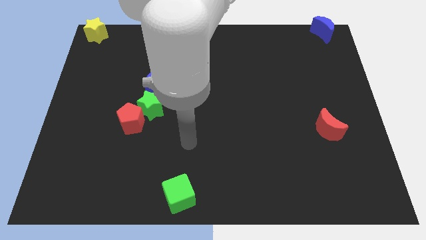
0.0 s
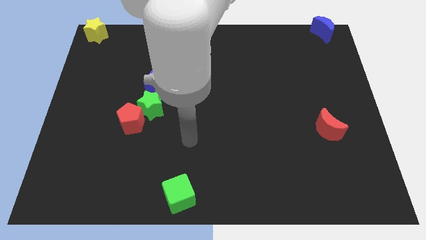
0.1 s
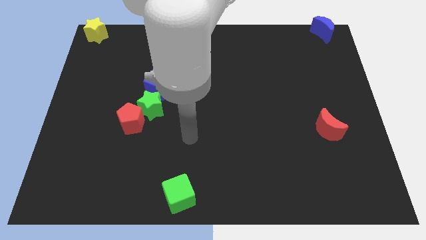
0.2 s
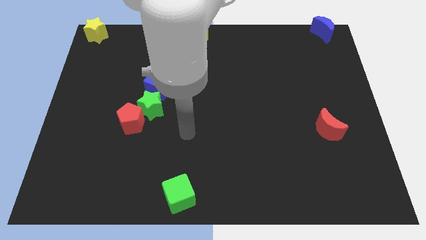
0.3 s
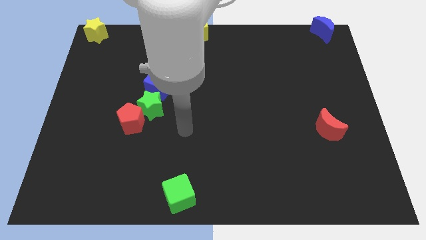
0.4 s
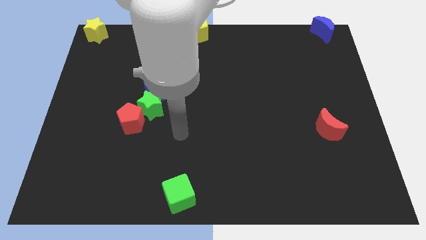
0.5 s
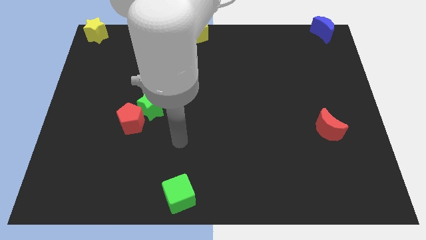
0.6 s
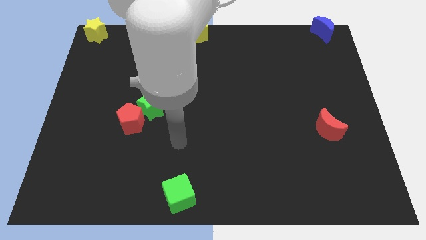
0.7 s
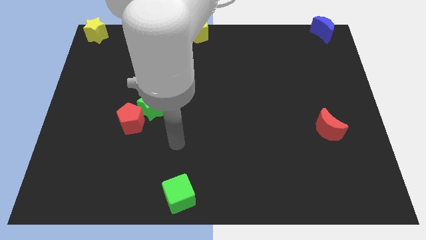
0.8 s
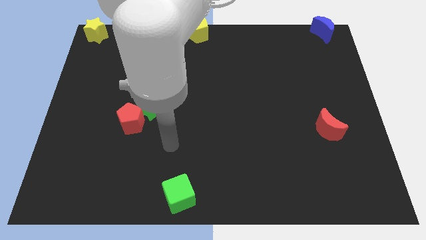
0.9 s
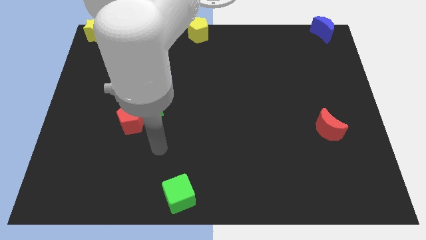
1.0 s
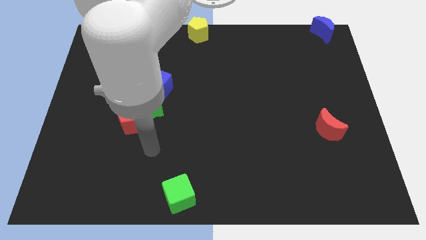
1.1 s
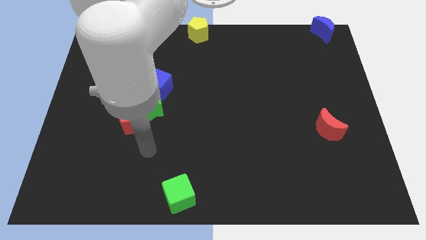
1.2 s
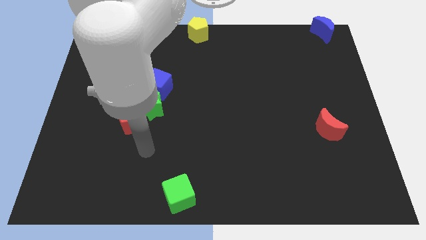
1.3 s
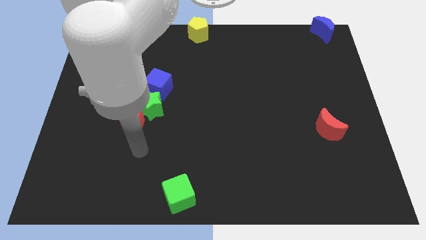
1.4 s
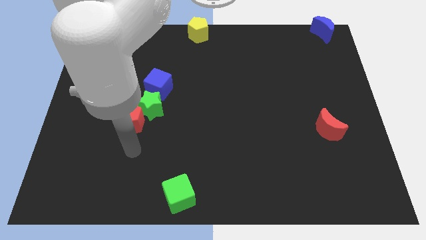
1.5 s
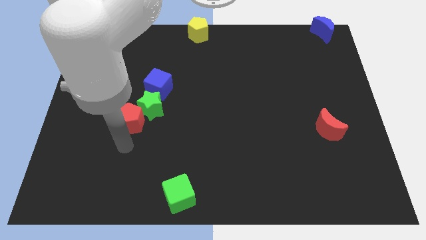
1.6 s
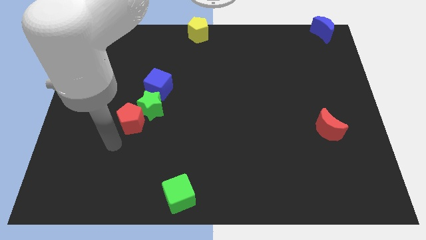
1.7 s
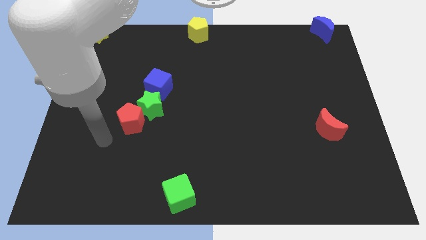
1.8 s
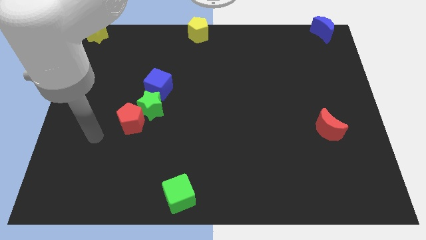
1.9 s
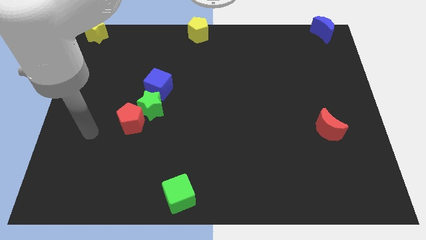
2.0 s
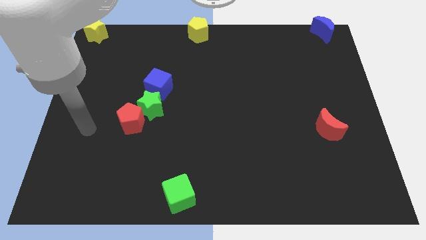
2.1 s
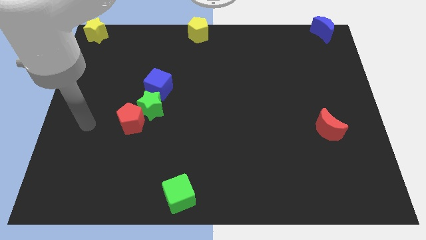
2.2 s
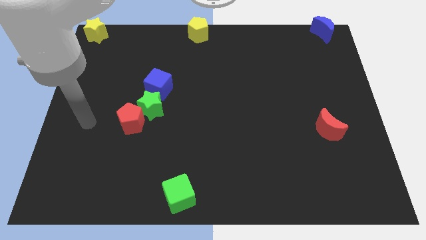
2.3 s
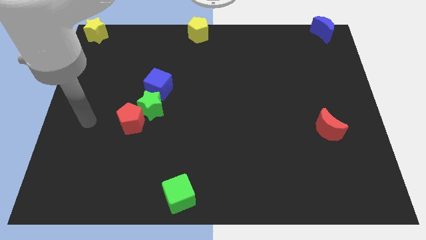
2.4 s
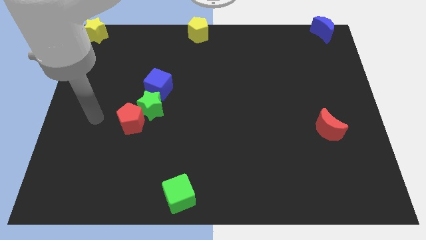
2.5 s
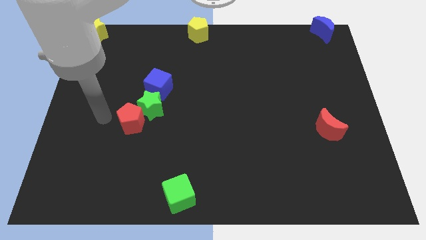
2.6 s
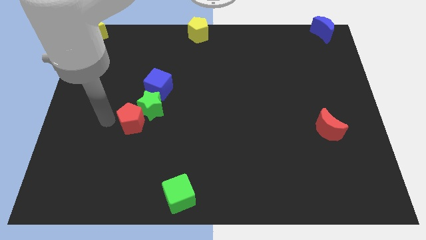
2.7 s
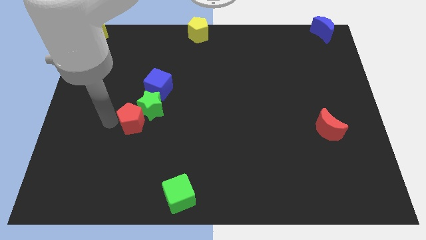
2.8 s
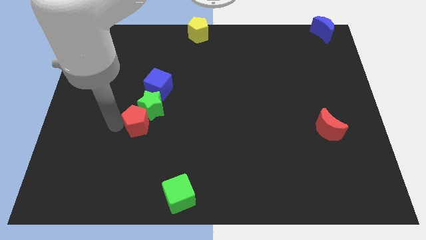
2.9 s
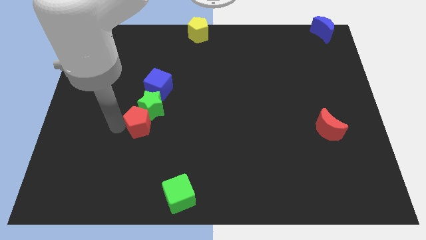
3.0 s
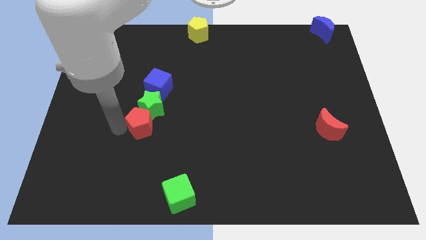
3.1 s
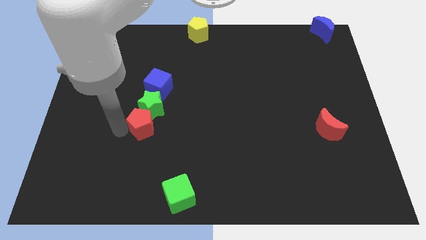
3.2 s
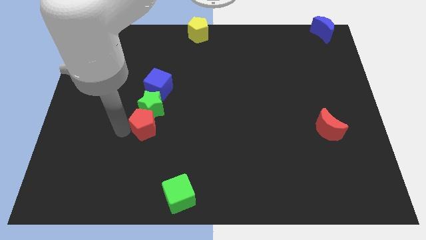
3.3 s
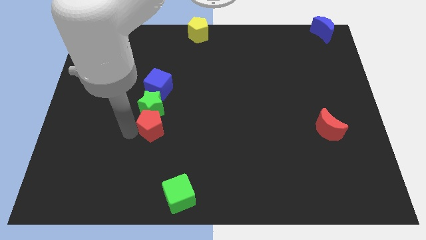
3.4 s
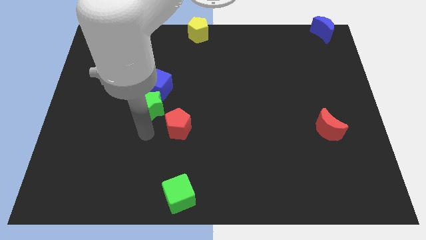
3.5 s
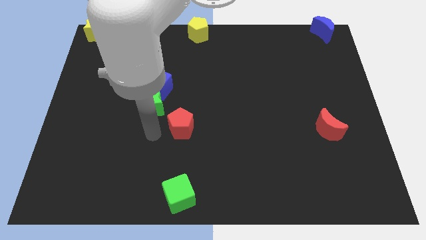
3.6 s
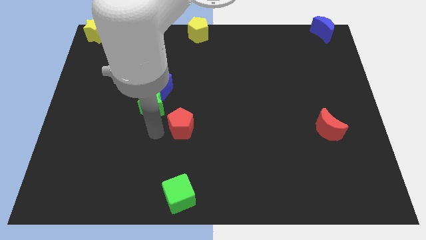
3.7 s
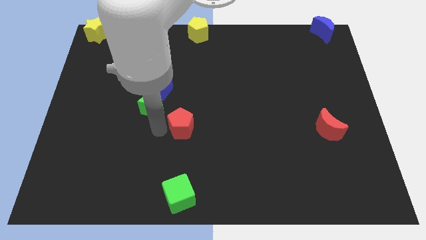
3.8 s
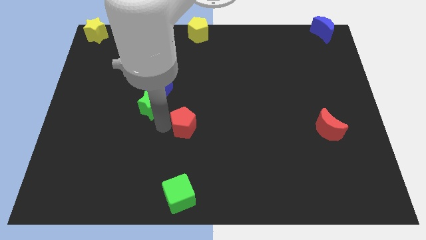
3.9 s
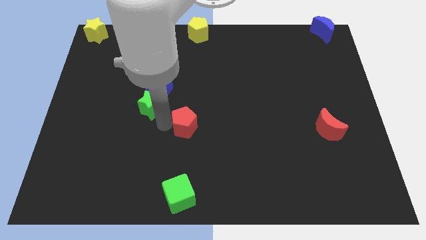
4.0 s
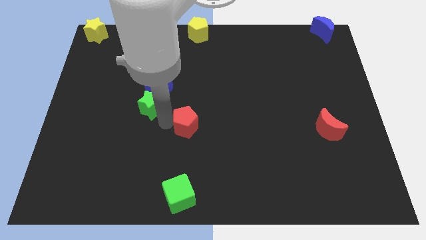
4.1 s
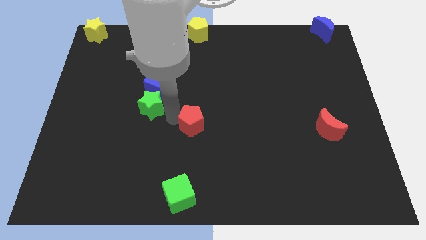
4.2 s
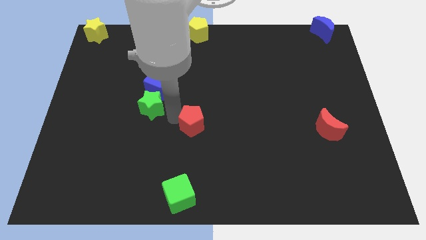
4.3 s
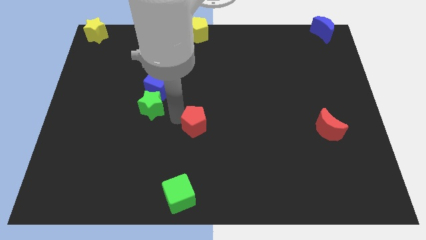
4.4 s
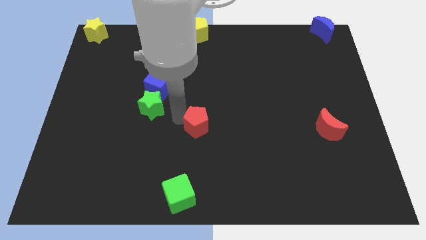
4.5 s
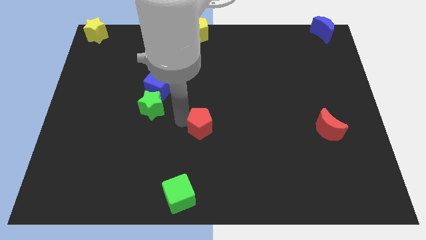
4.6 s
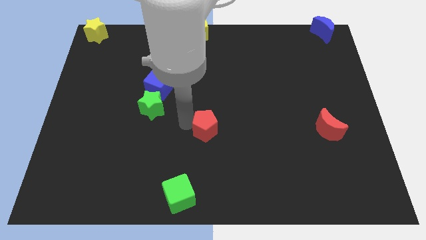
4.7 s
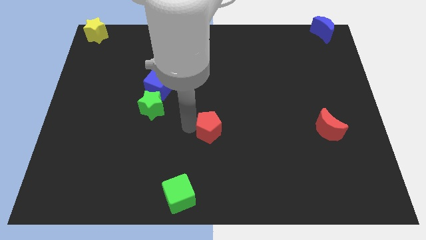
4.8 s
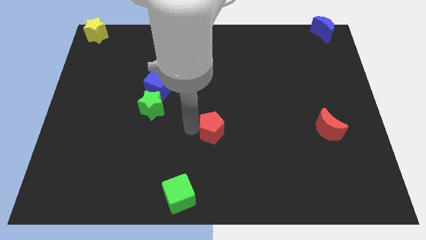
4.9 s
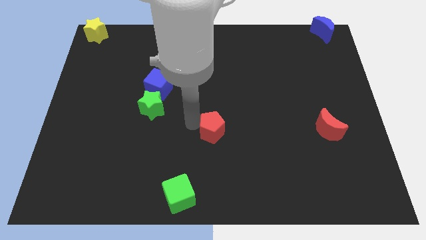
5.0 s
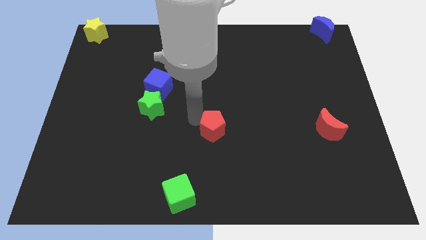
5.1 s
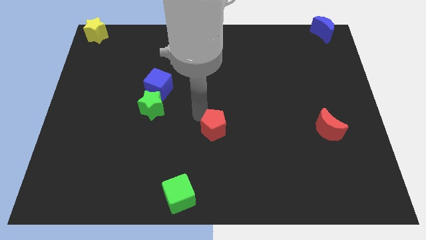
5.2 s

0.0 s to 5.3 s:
place the red pentagon parallel to the red moon

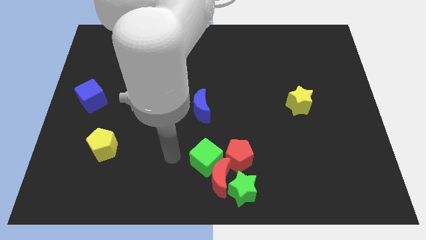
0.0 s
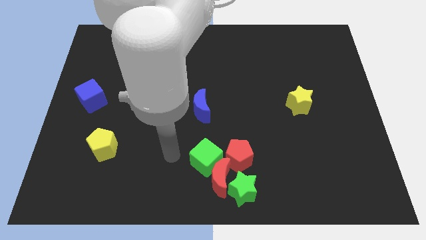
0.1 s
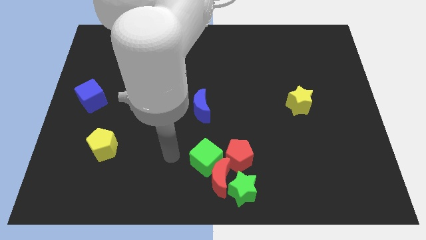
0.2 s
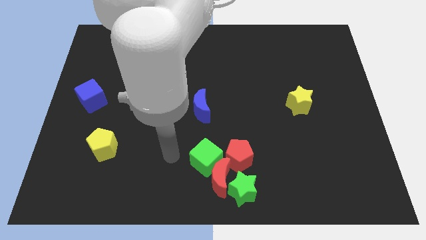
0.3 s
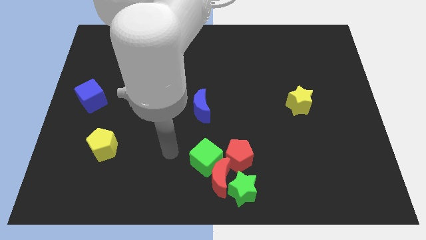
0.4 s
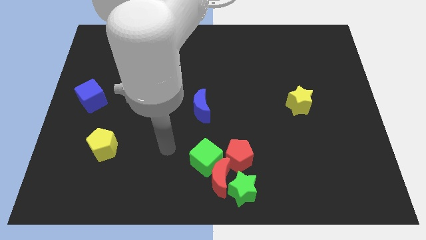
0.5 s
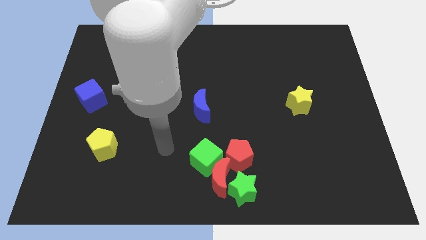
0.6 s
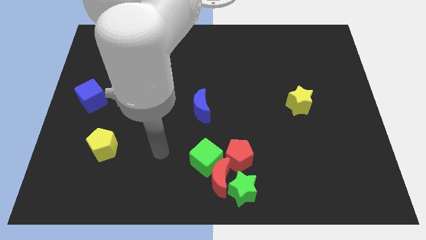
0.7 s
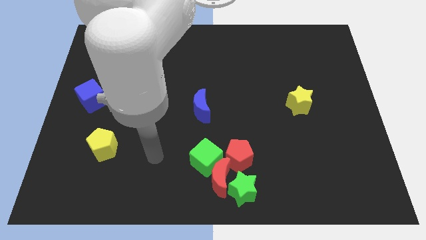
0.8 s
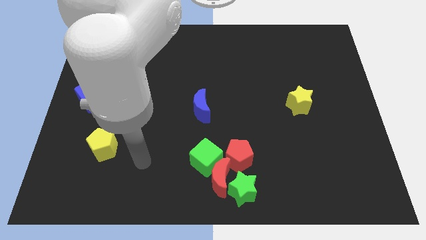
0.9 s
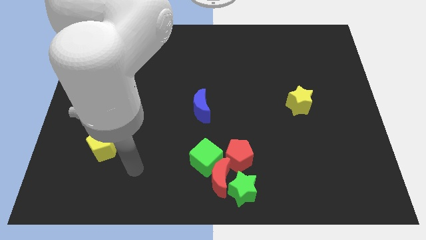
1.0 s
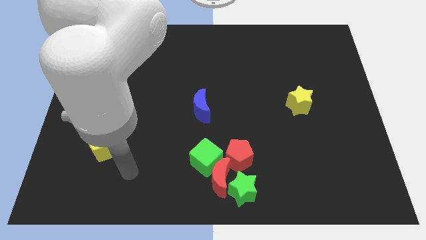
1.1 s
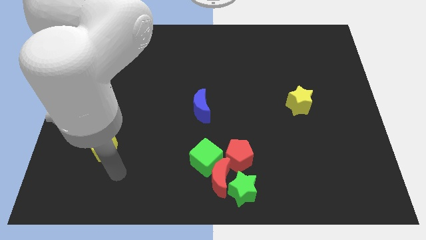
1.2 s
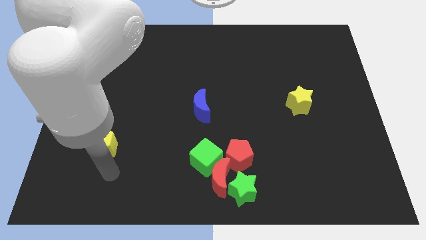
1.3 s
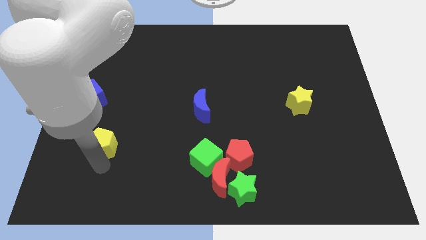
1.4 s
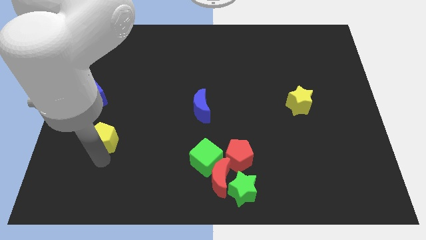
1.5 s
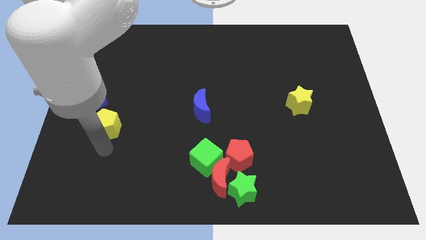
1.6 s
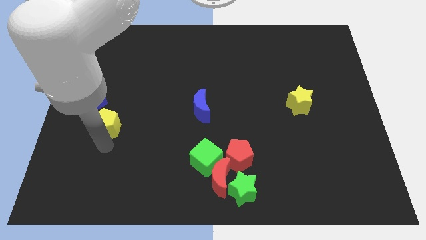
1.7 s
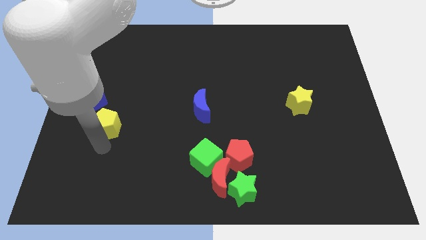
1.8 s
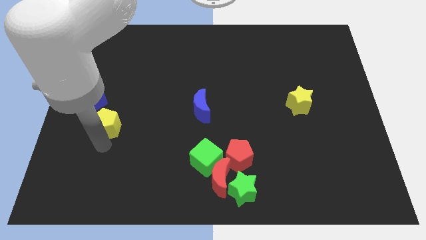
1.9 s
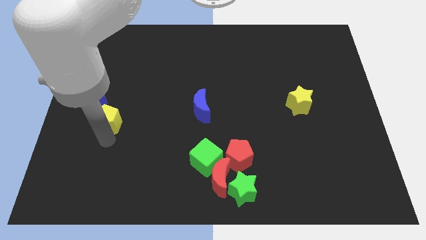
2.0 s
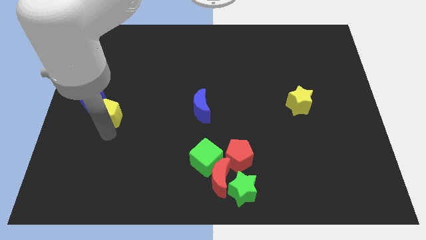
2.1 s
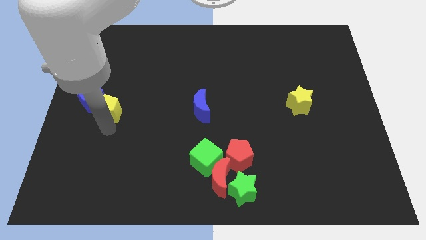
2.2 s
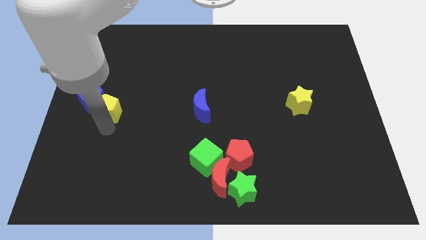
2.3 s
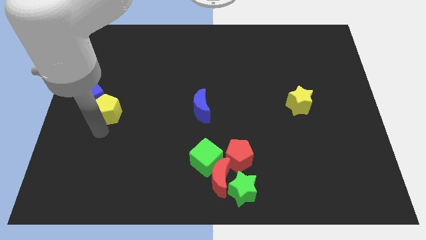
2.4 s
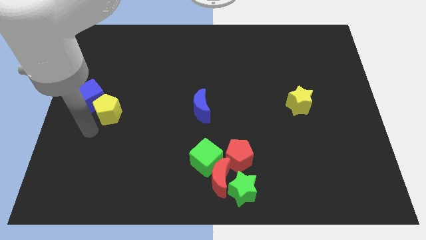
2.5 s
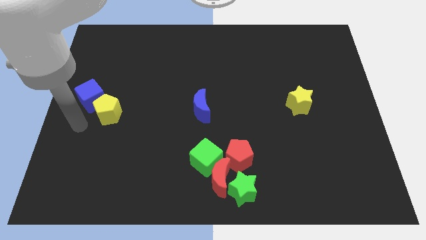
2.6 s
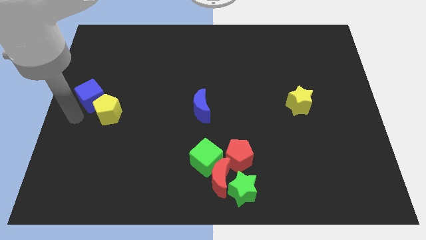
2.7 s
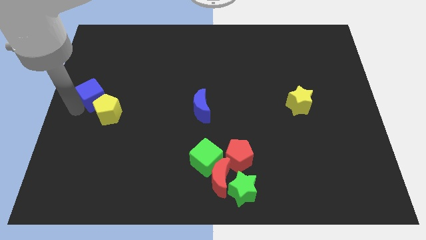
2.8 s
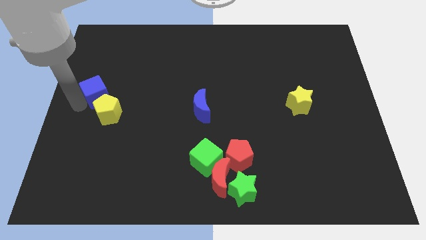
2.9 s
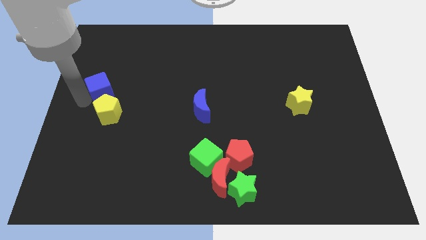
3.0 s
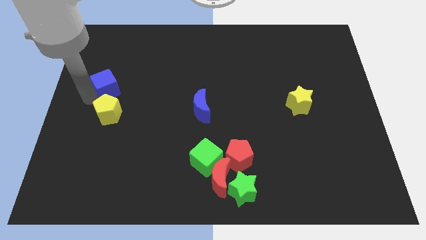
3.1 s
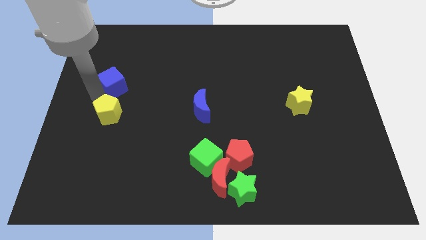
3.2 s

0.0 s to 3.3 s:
place the yellow pentagon below the blue cube

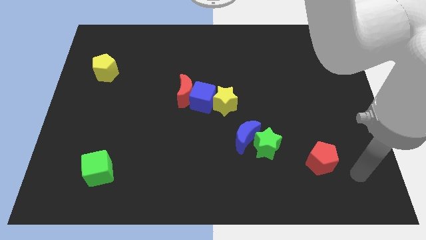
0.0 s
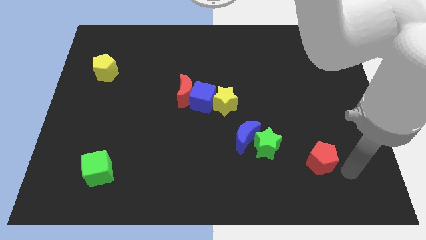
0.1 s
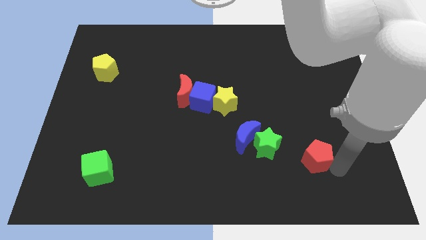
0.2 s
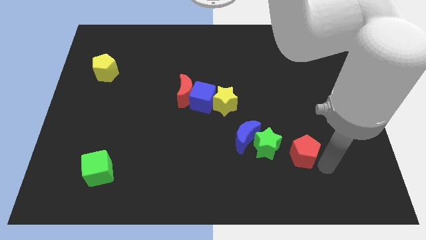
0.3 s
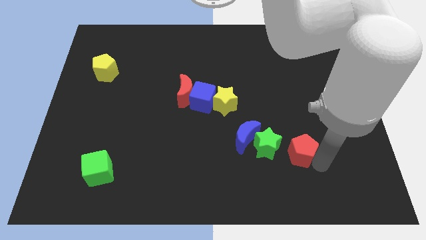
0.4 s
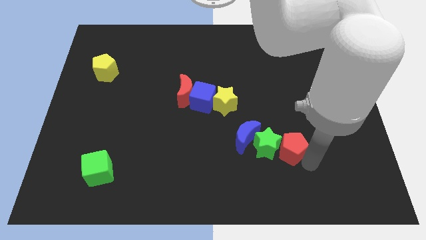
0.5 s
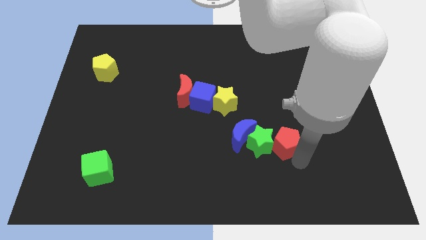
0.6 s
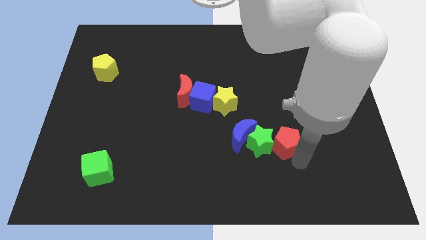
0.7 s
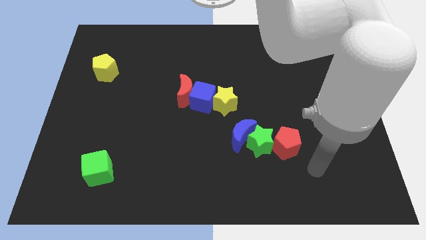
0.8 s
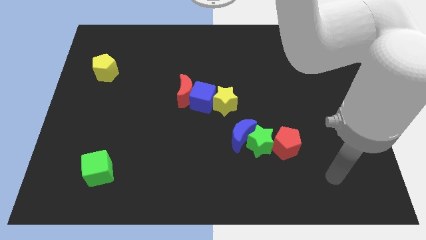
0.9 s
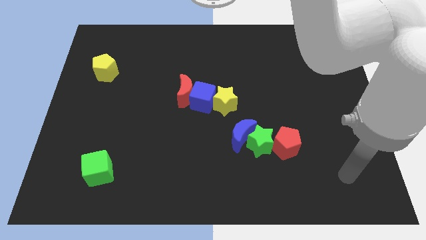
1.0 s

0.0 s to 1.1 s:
move red pentagon into green star
